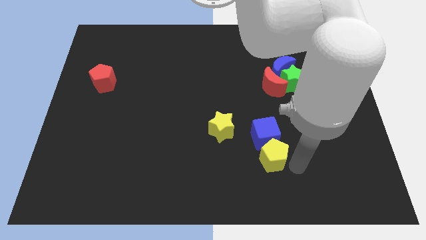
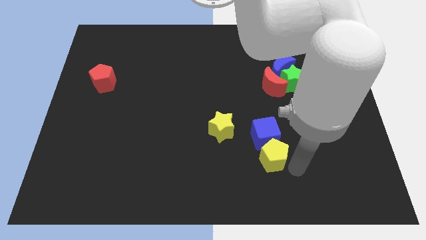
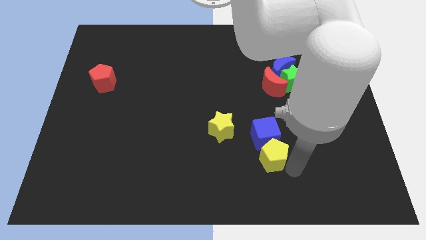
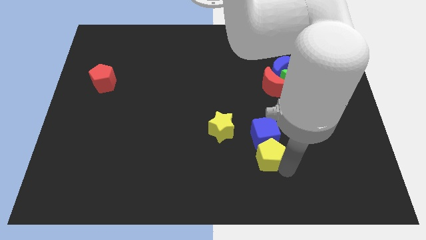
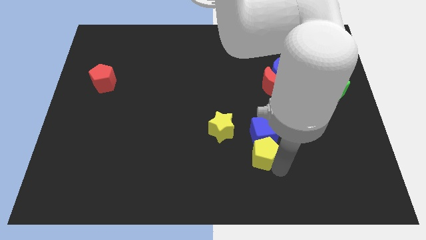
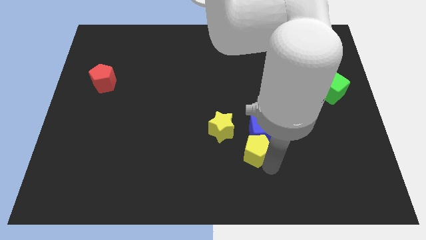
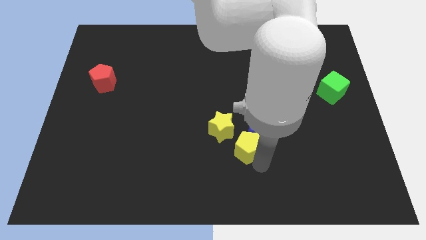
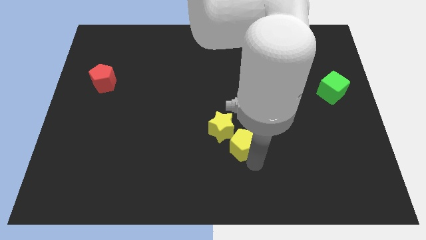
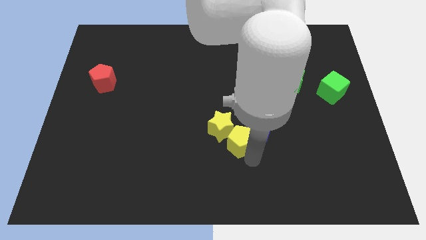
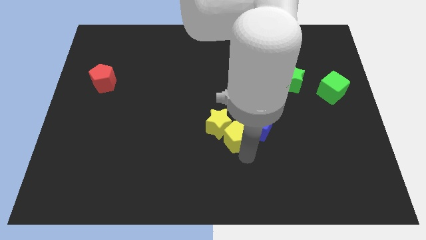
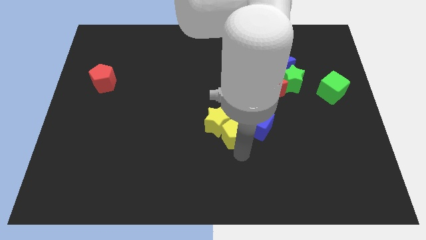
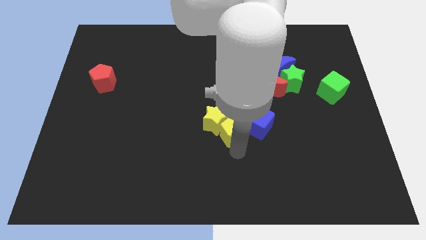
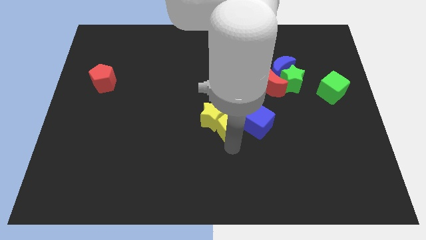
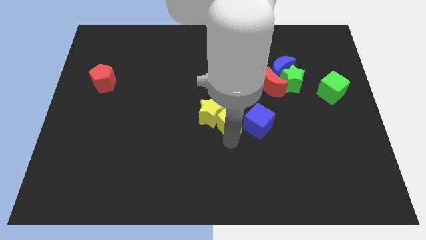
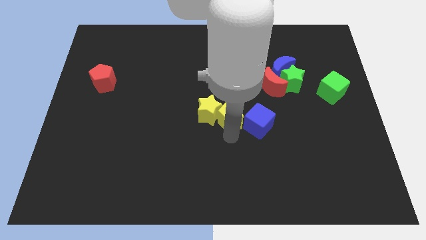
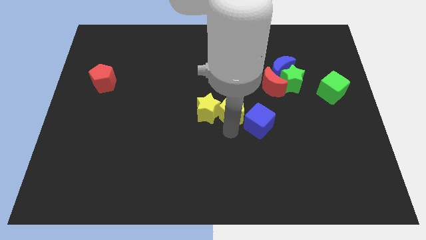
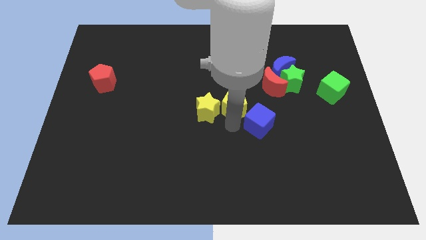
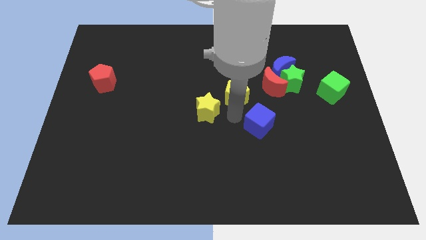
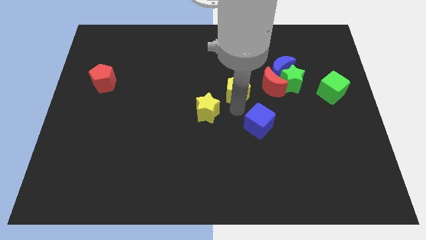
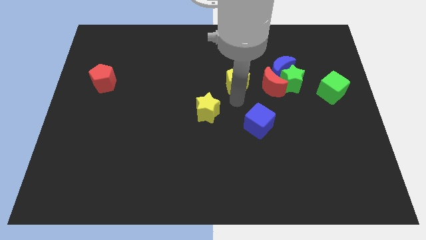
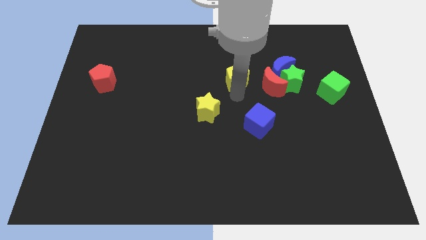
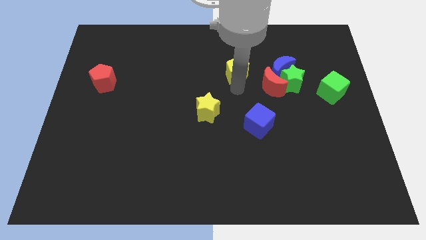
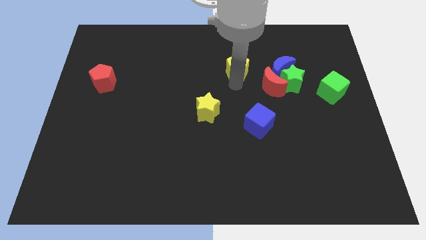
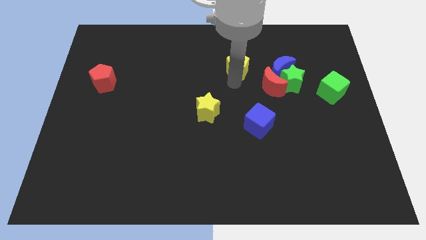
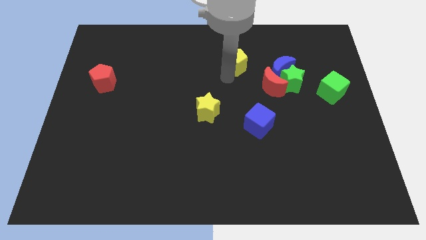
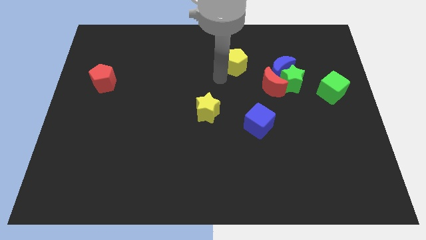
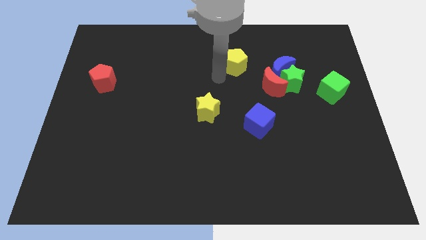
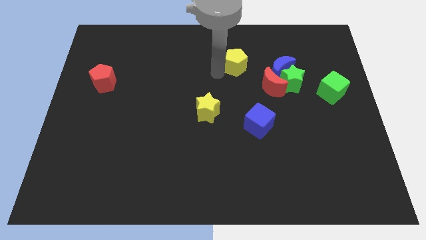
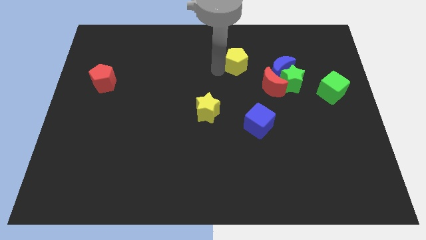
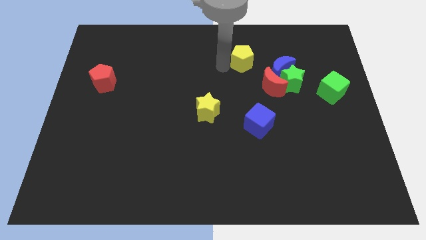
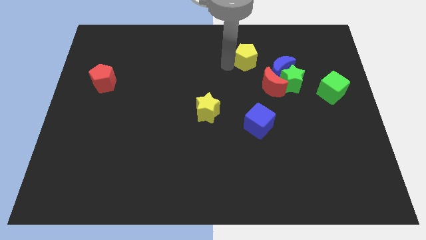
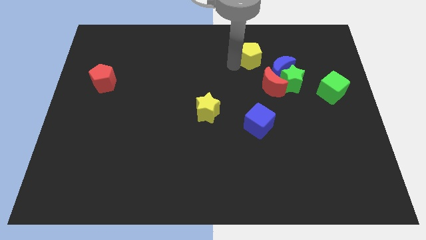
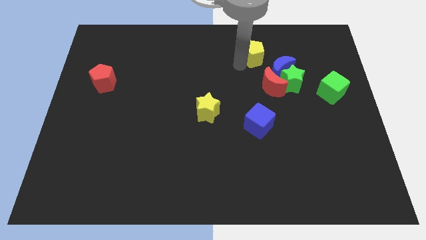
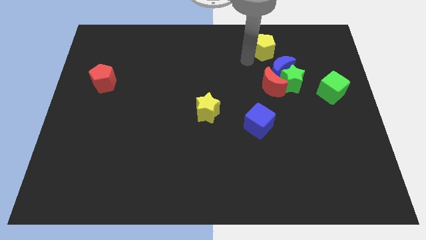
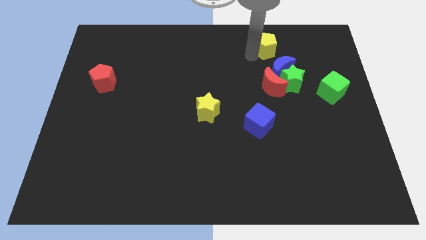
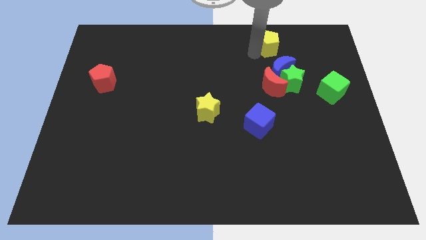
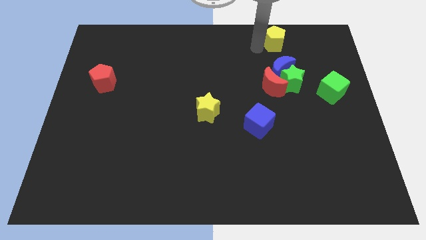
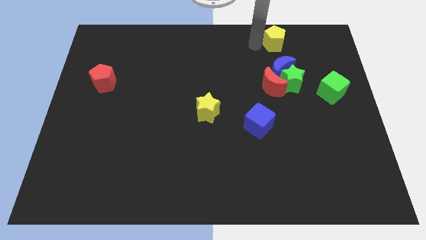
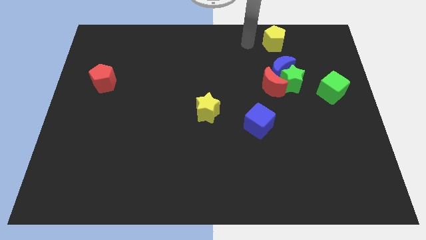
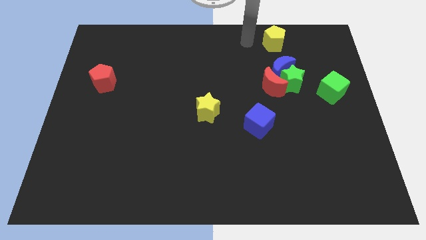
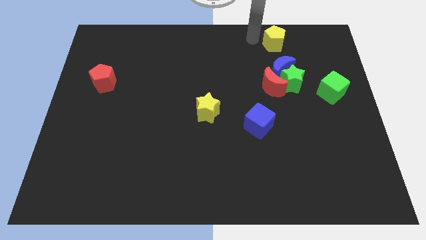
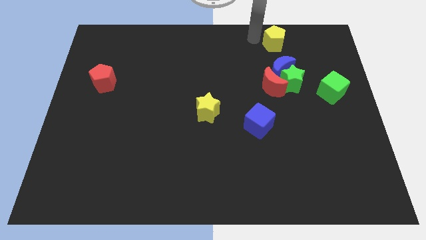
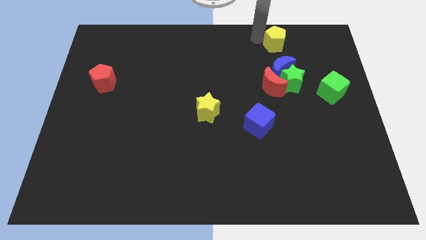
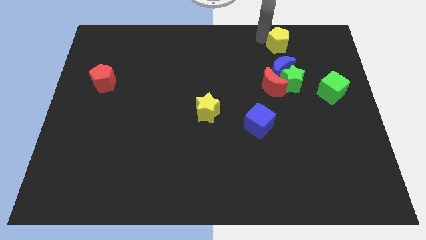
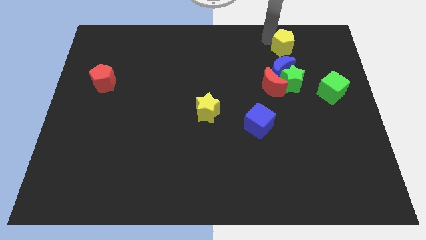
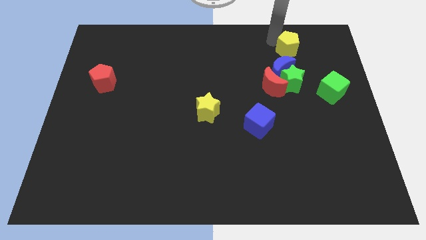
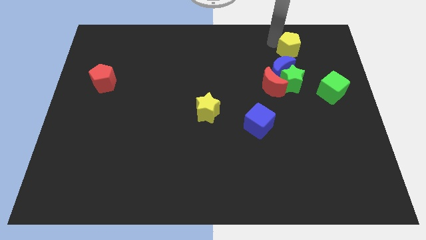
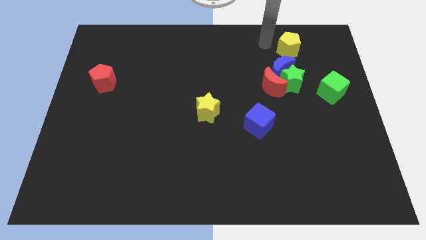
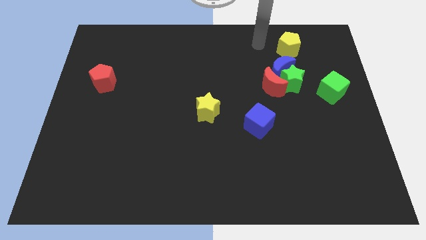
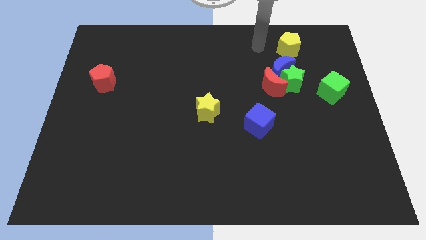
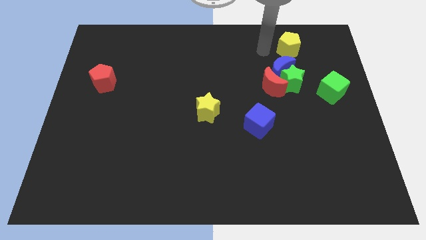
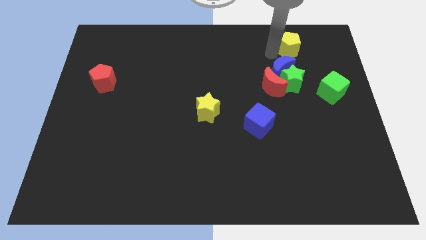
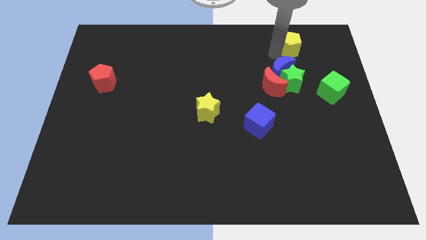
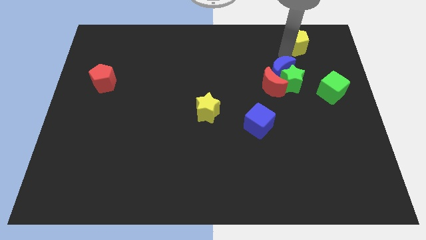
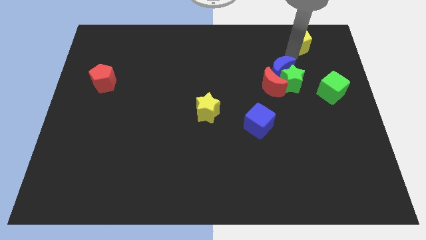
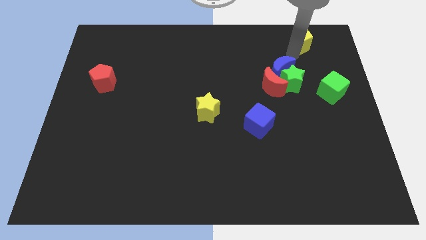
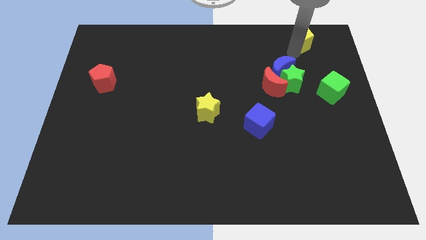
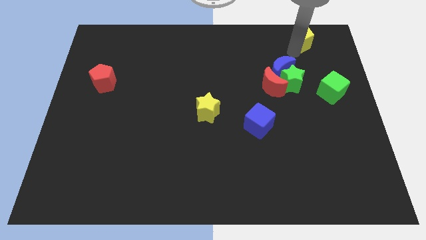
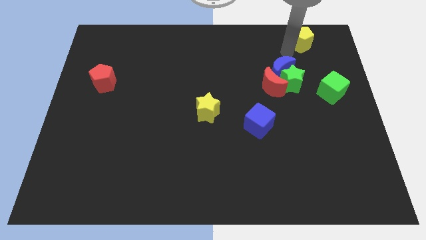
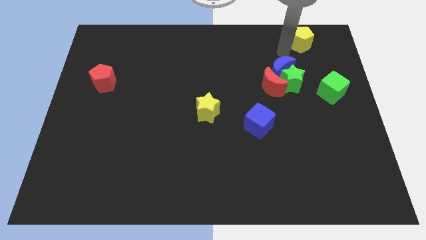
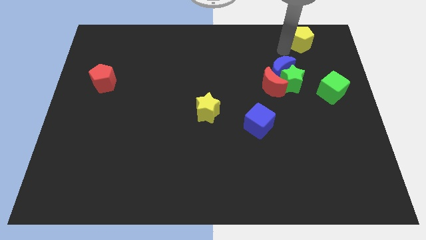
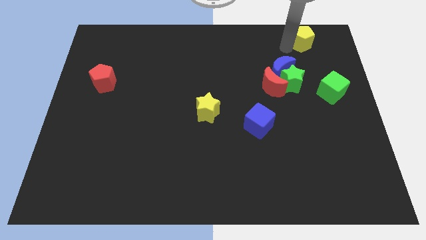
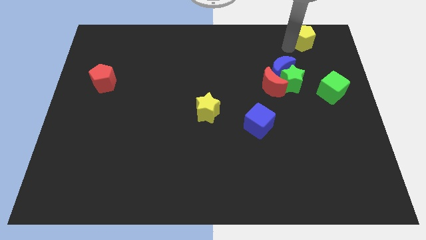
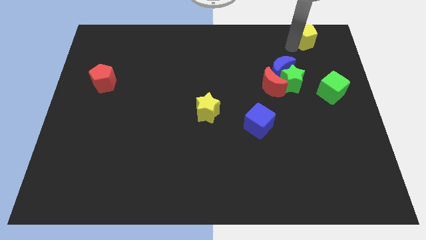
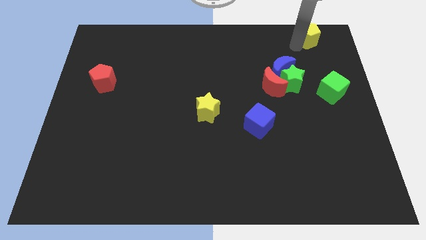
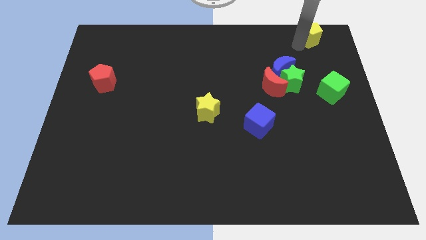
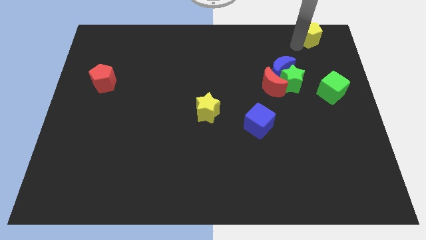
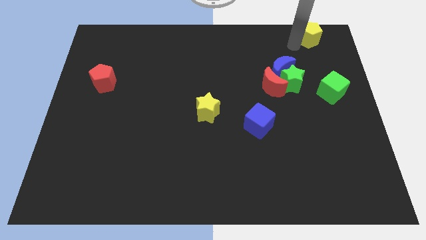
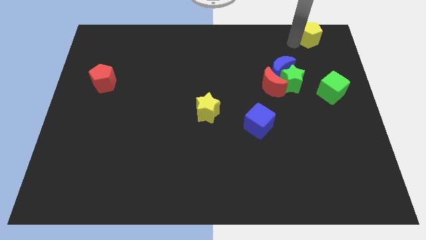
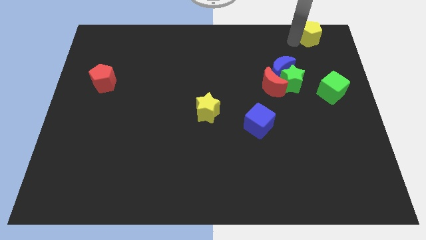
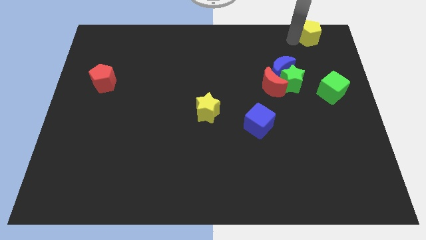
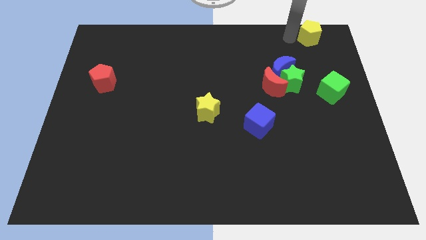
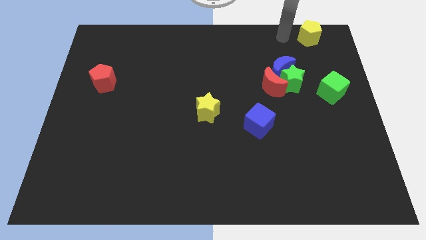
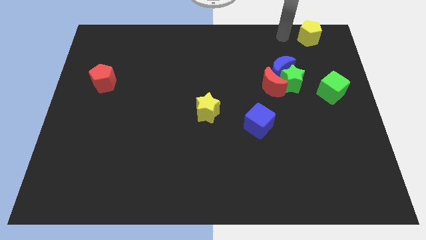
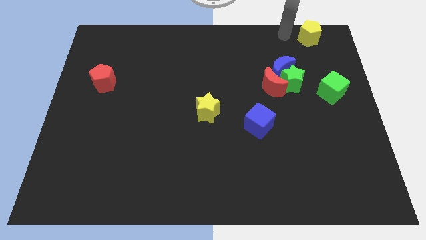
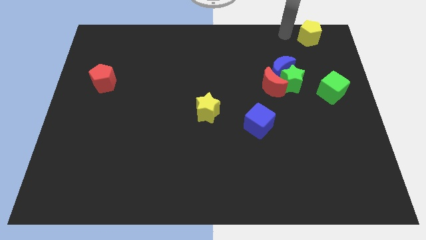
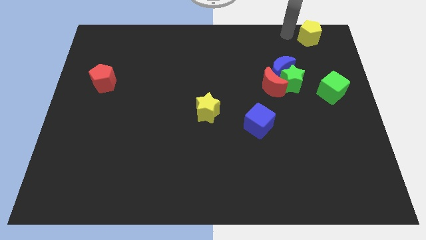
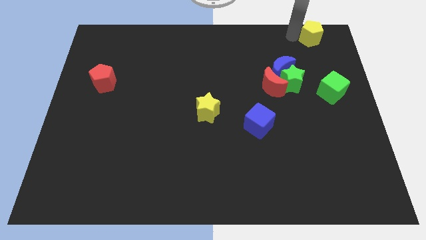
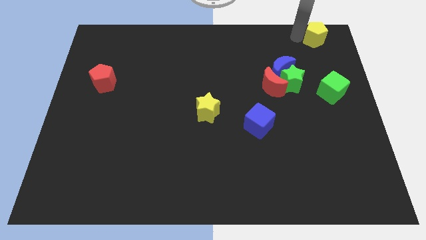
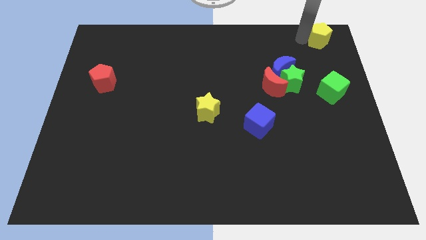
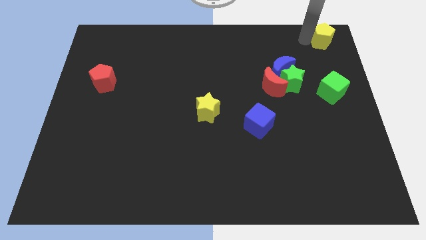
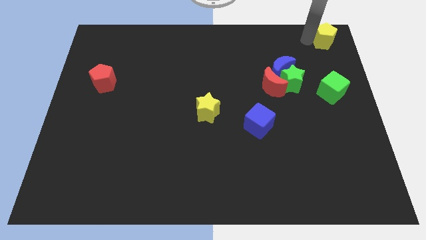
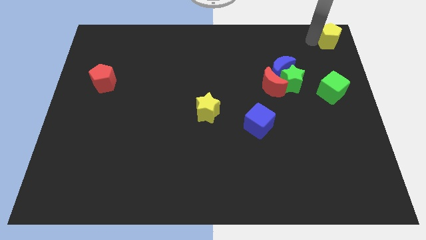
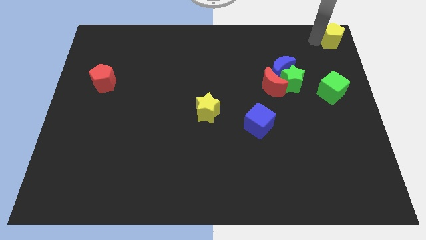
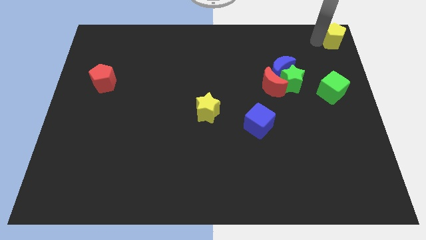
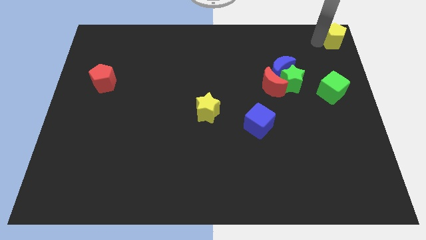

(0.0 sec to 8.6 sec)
move the yellow pentagon to the top right corner of the board

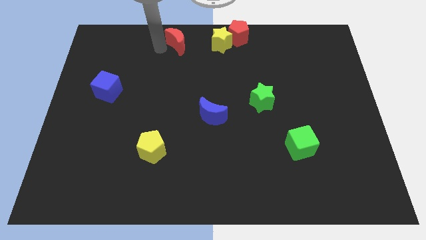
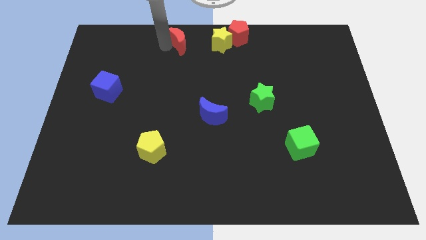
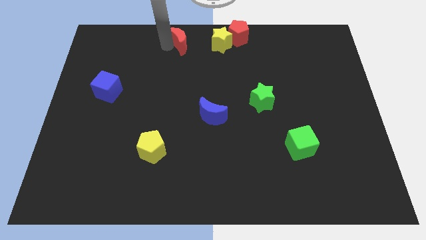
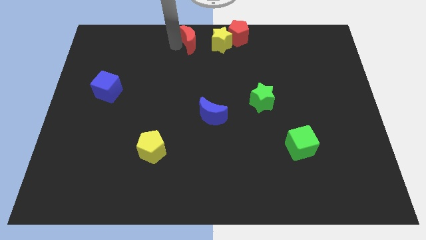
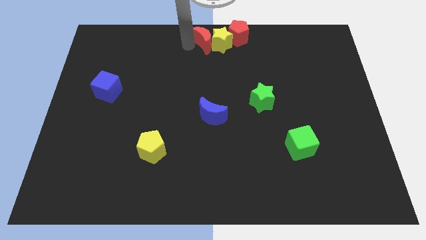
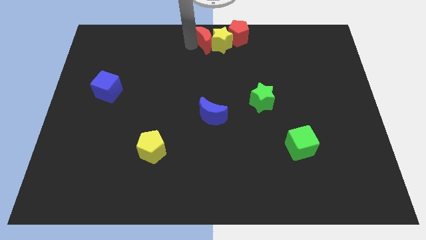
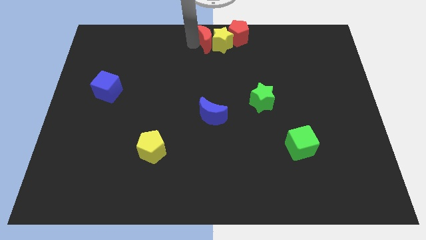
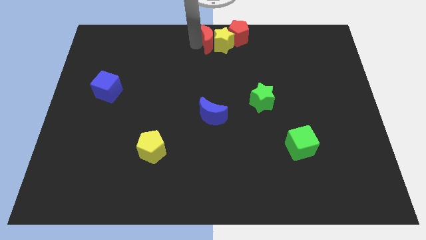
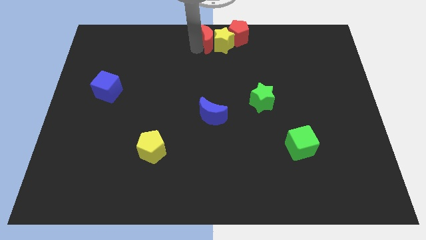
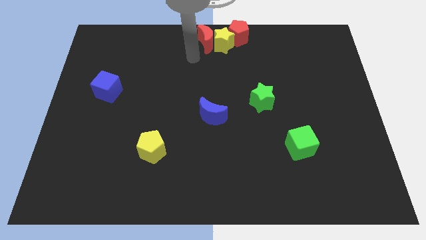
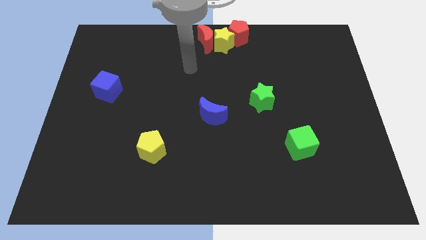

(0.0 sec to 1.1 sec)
move the red crescent to the left of the yellow star
